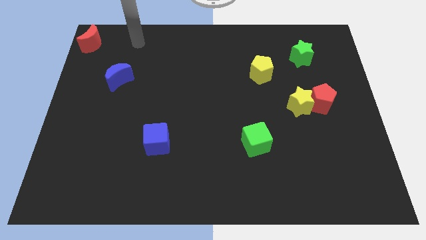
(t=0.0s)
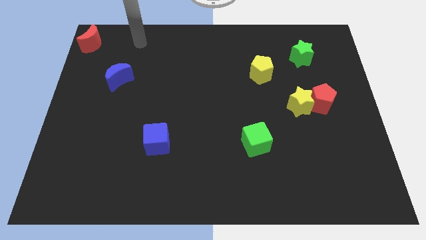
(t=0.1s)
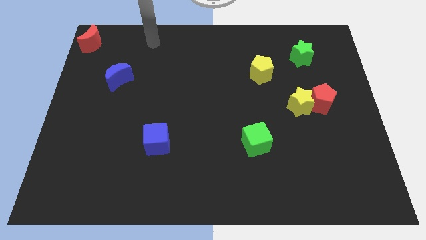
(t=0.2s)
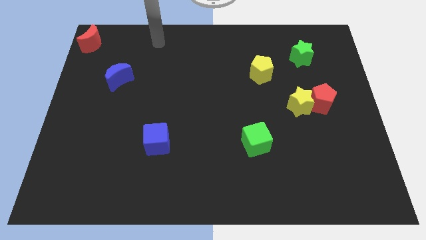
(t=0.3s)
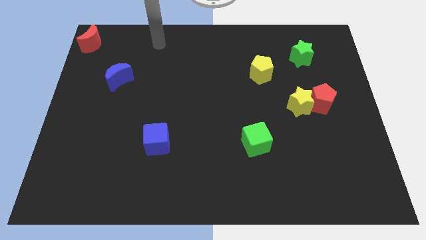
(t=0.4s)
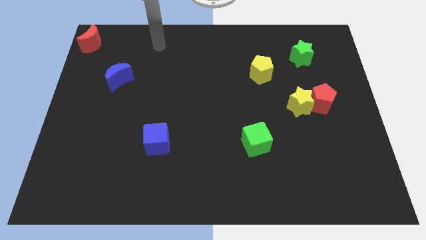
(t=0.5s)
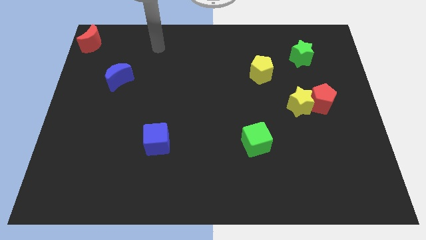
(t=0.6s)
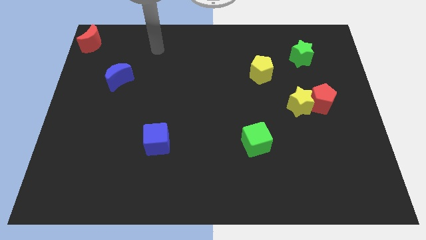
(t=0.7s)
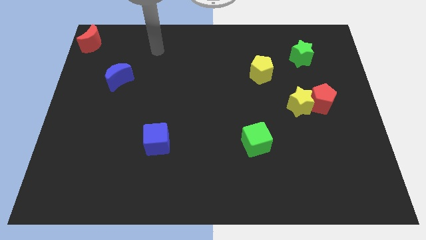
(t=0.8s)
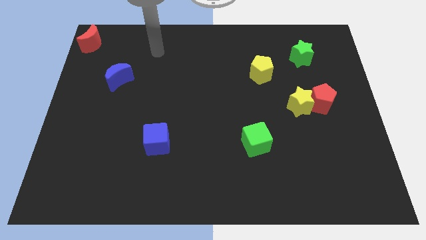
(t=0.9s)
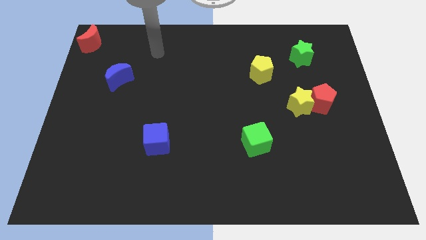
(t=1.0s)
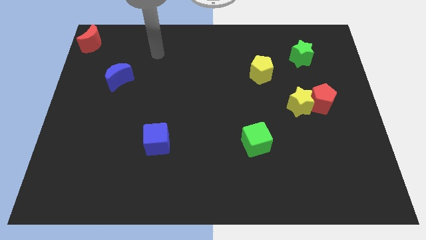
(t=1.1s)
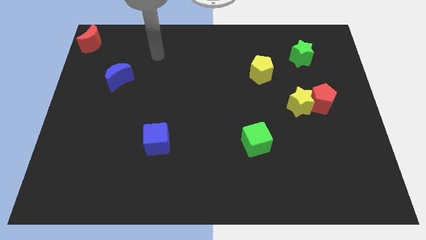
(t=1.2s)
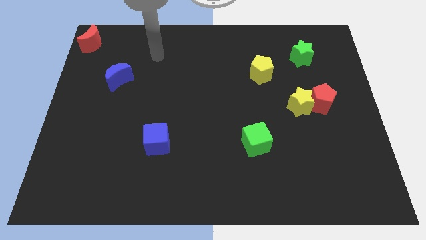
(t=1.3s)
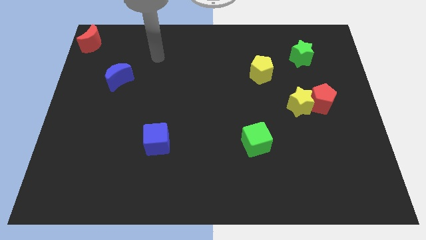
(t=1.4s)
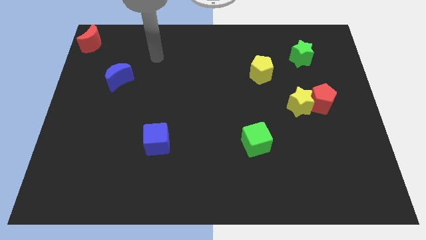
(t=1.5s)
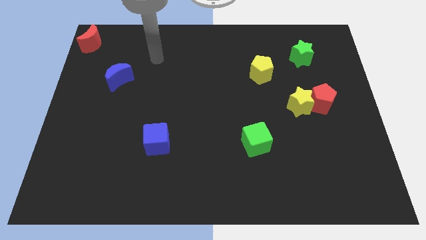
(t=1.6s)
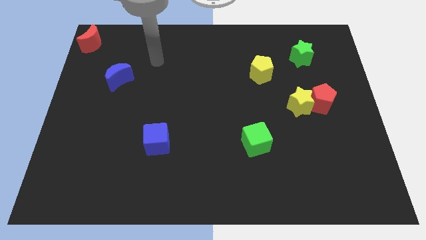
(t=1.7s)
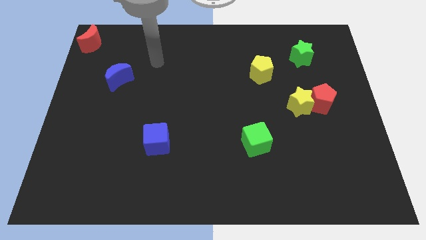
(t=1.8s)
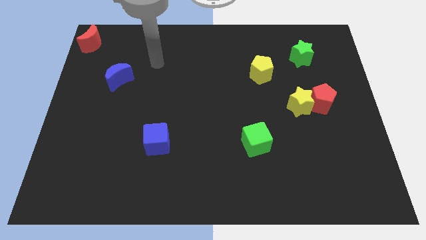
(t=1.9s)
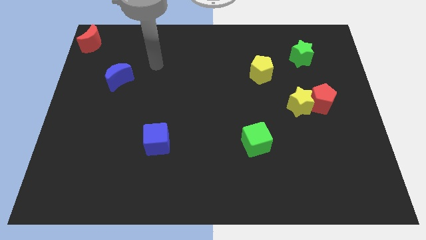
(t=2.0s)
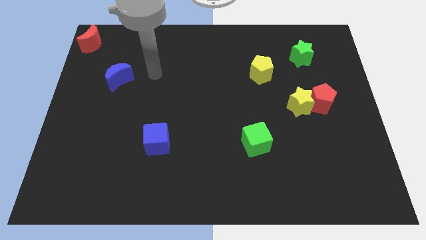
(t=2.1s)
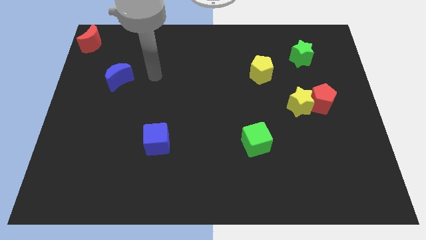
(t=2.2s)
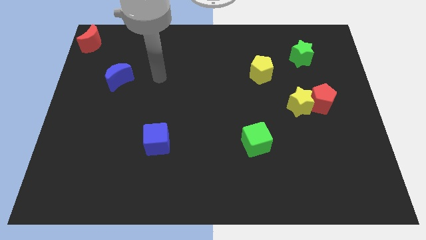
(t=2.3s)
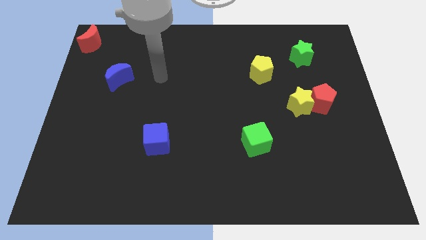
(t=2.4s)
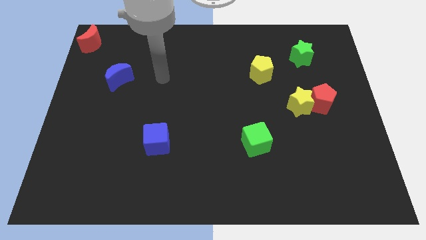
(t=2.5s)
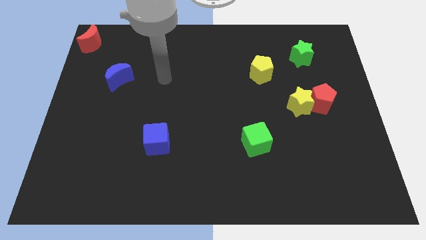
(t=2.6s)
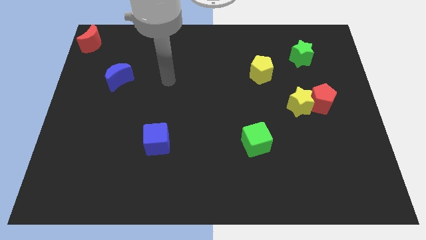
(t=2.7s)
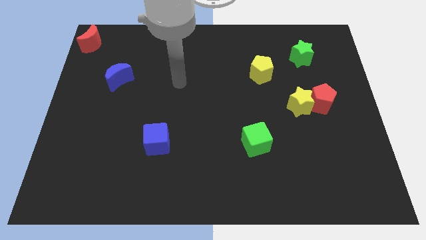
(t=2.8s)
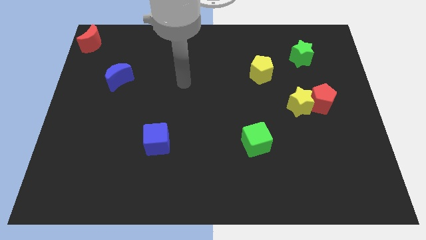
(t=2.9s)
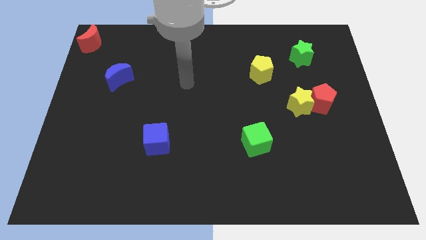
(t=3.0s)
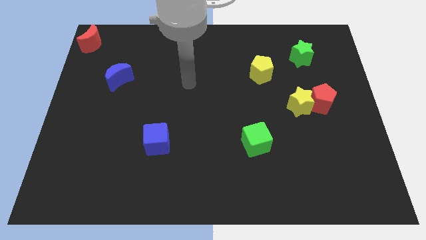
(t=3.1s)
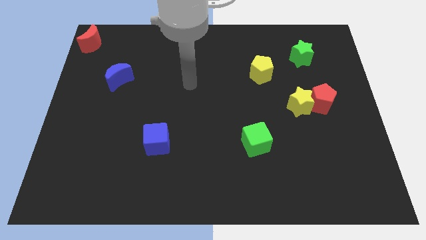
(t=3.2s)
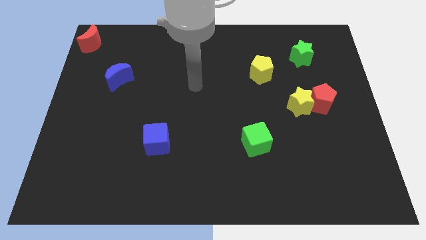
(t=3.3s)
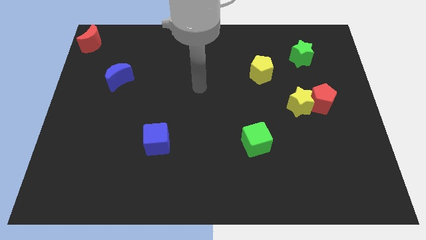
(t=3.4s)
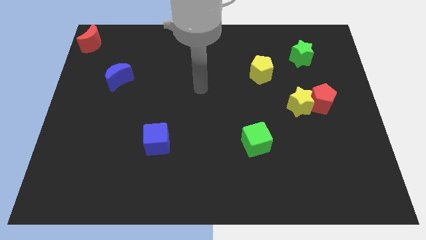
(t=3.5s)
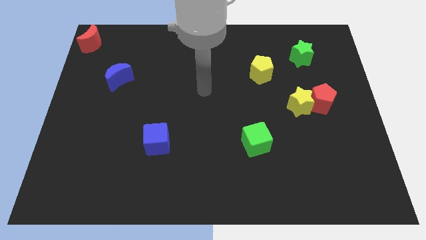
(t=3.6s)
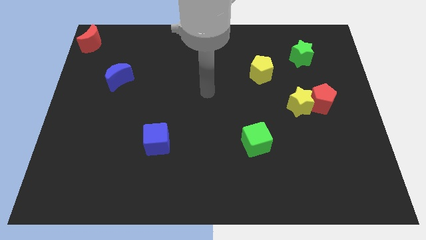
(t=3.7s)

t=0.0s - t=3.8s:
point your hand at the center of the board

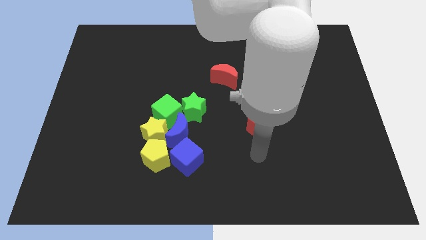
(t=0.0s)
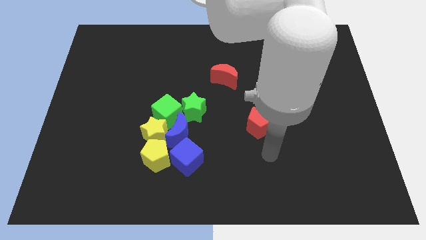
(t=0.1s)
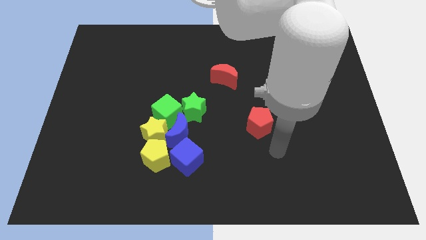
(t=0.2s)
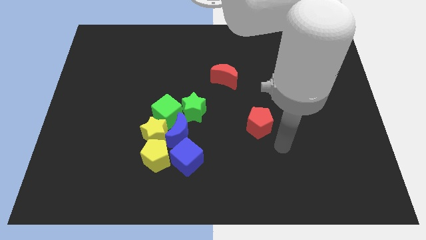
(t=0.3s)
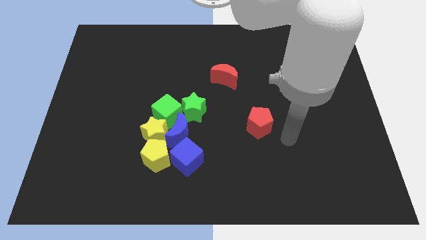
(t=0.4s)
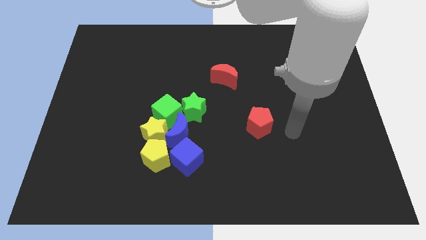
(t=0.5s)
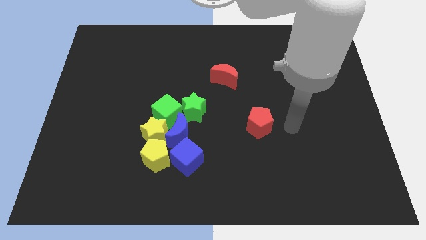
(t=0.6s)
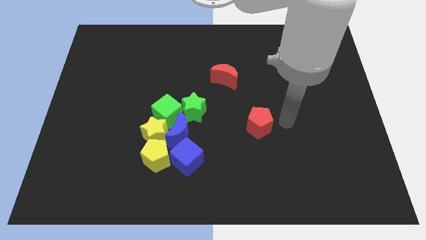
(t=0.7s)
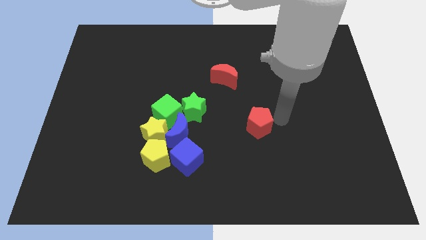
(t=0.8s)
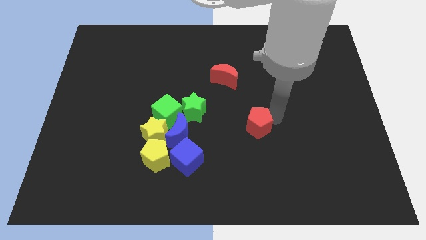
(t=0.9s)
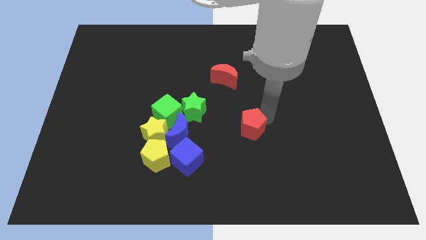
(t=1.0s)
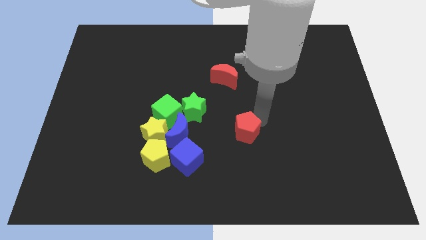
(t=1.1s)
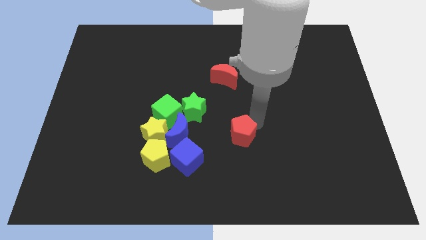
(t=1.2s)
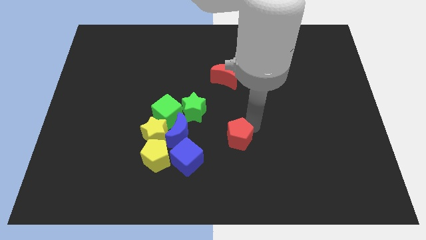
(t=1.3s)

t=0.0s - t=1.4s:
place the red pentagon to the right of the blue moon

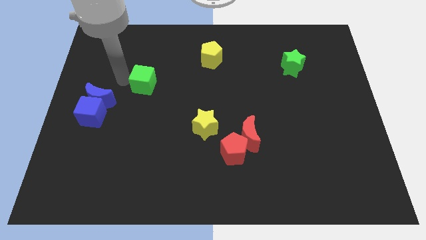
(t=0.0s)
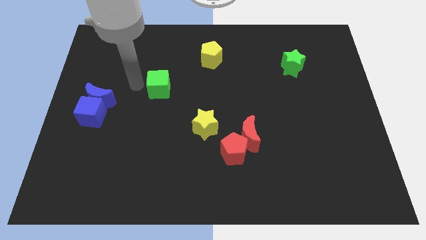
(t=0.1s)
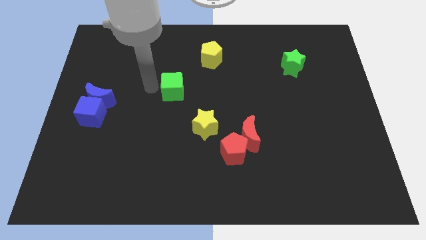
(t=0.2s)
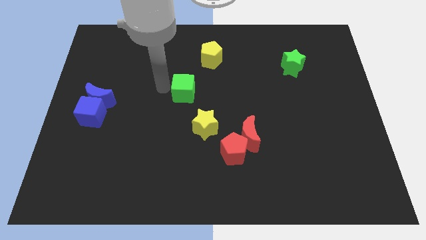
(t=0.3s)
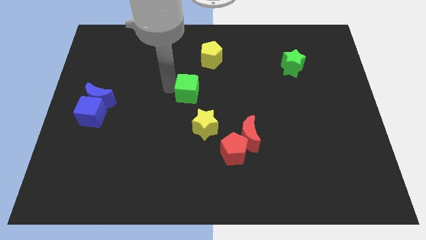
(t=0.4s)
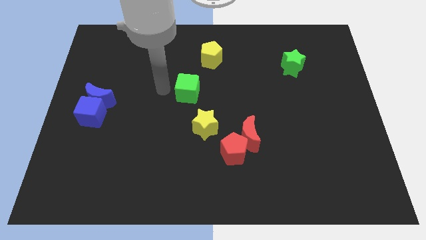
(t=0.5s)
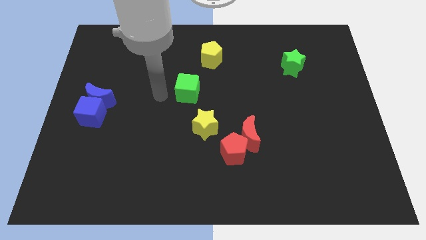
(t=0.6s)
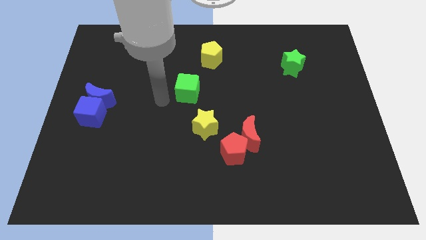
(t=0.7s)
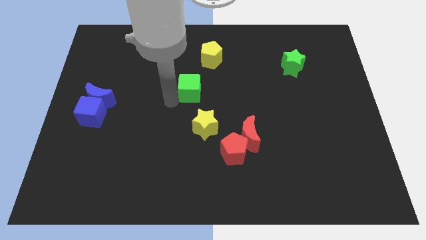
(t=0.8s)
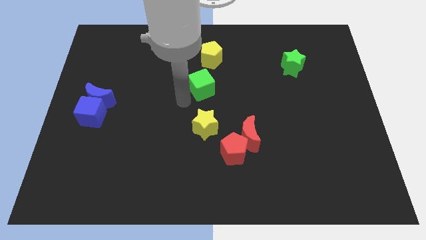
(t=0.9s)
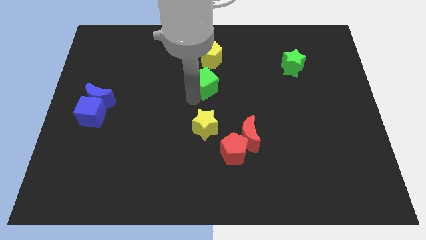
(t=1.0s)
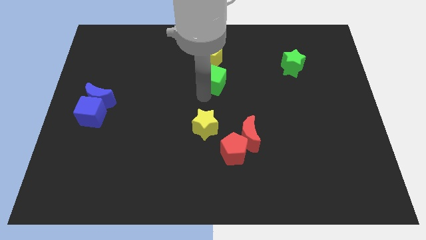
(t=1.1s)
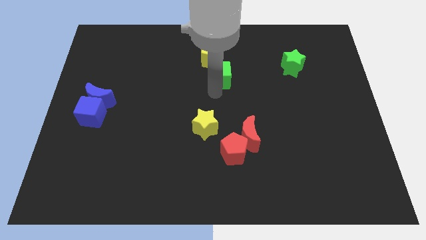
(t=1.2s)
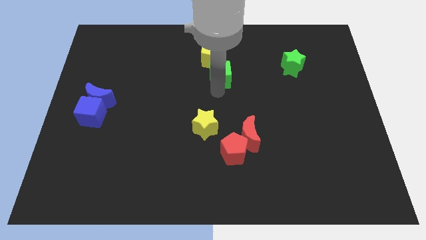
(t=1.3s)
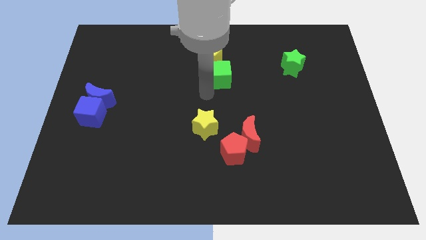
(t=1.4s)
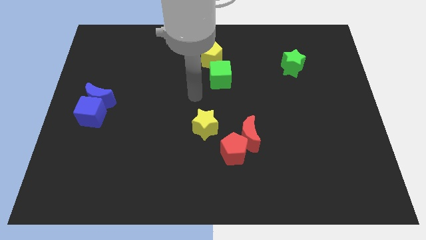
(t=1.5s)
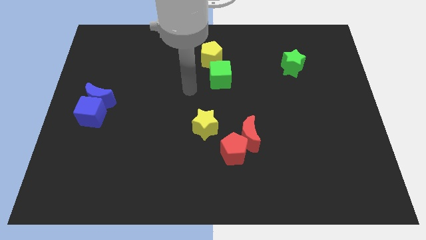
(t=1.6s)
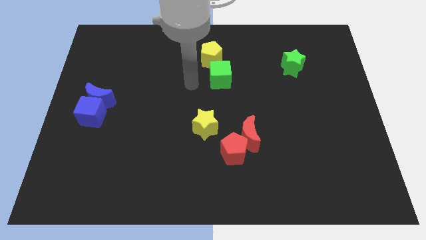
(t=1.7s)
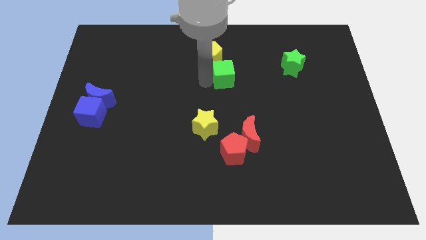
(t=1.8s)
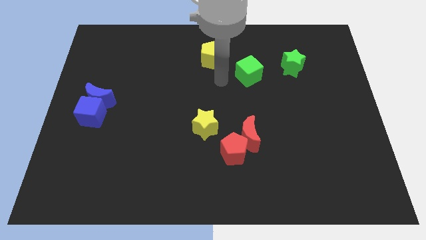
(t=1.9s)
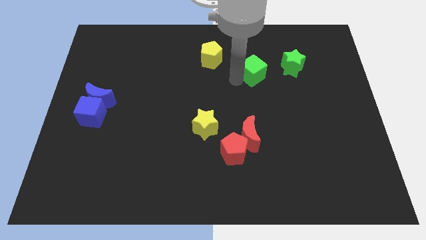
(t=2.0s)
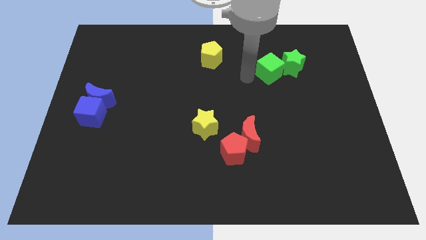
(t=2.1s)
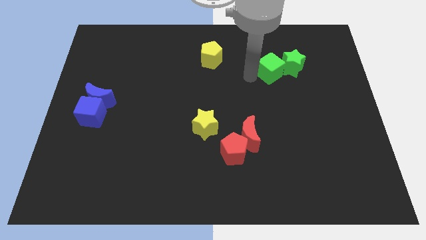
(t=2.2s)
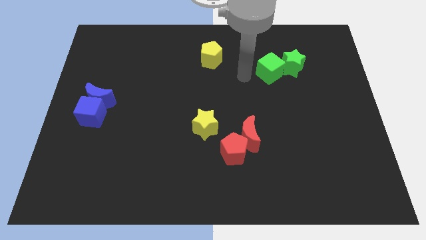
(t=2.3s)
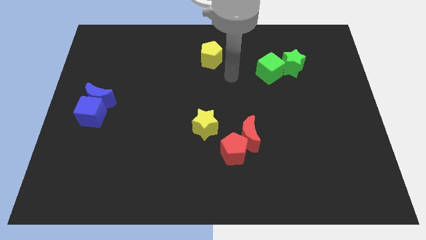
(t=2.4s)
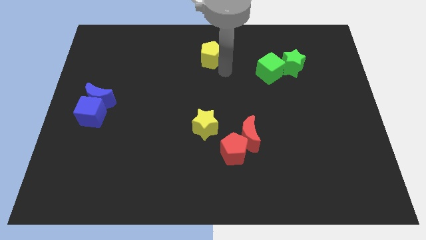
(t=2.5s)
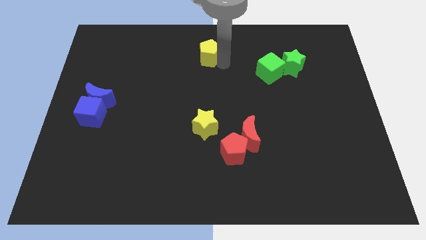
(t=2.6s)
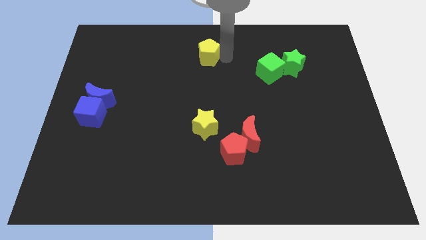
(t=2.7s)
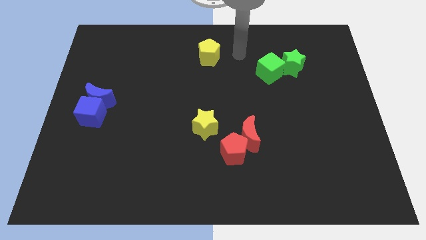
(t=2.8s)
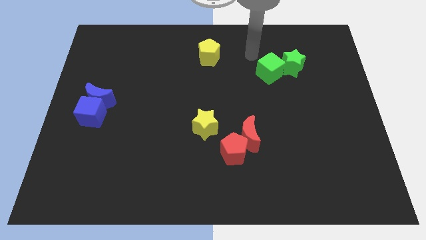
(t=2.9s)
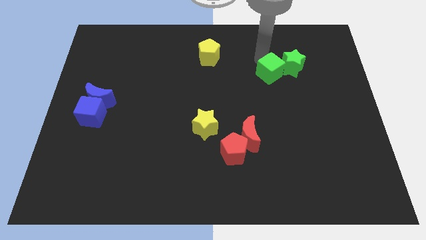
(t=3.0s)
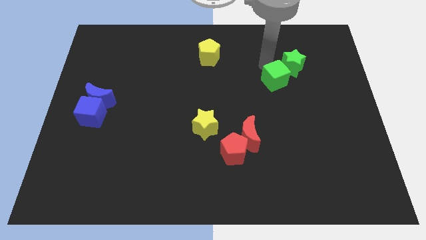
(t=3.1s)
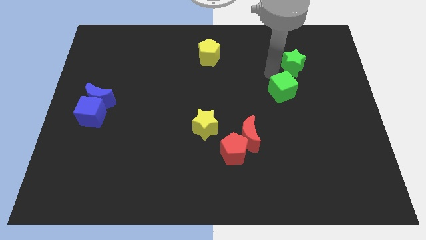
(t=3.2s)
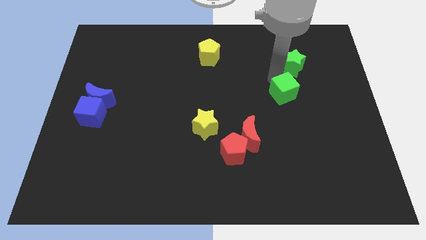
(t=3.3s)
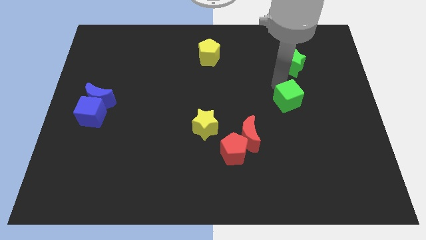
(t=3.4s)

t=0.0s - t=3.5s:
place the green cube below the green star

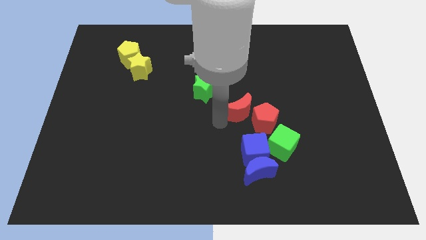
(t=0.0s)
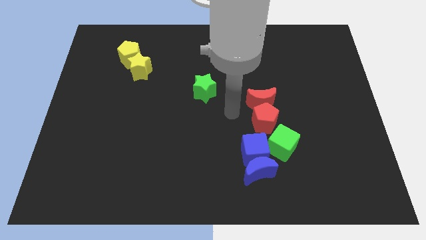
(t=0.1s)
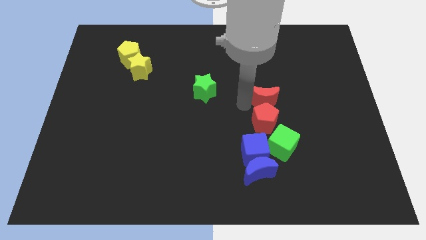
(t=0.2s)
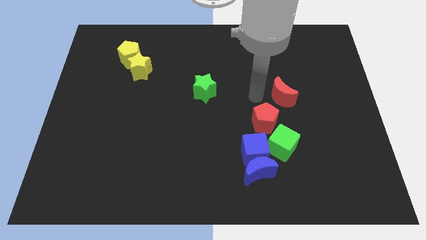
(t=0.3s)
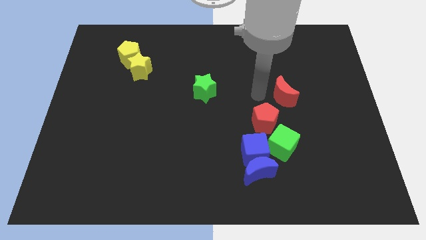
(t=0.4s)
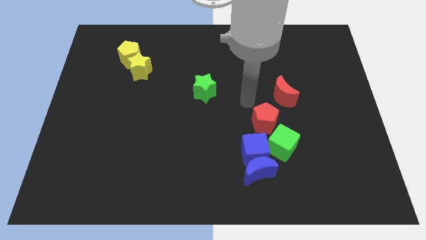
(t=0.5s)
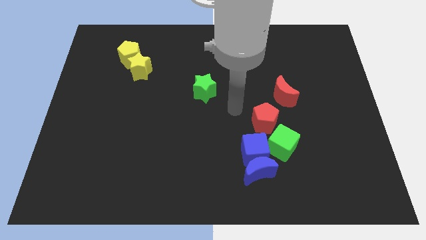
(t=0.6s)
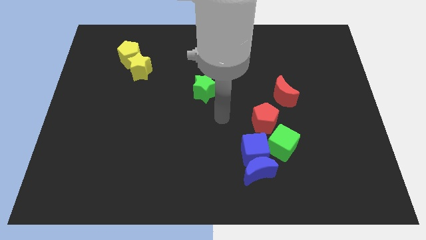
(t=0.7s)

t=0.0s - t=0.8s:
move the red crescent to the right of the board
